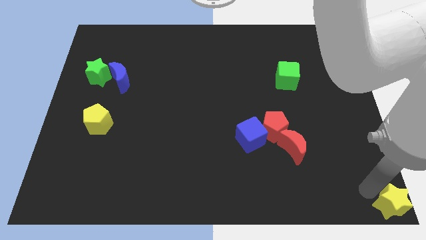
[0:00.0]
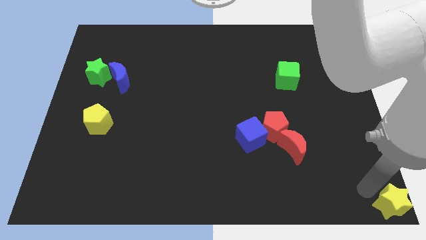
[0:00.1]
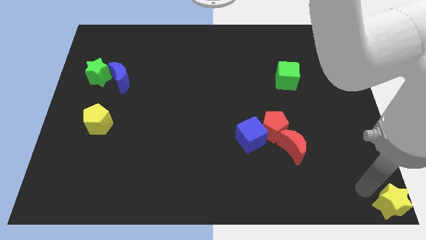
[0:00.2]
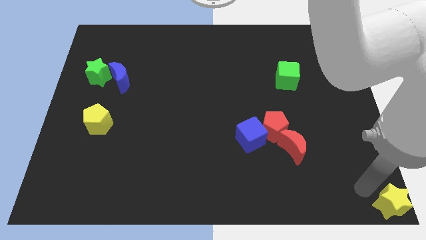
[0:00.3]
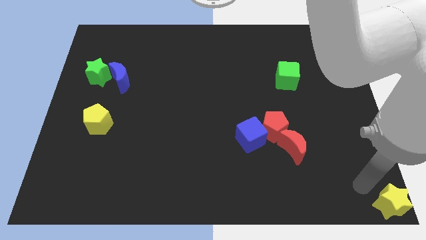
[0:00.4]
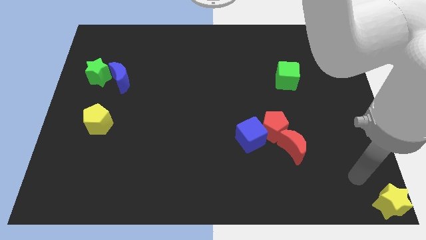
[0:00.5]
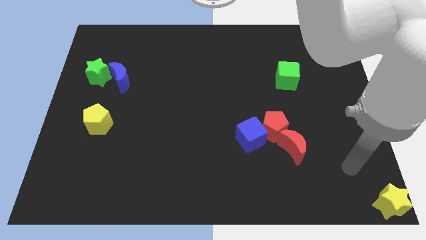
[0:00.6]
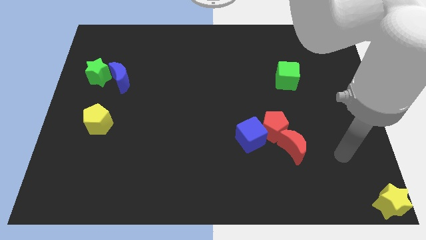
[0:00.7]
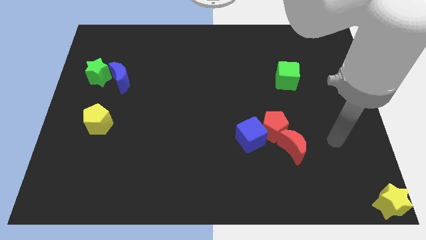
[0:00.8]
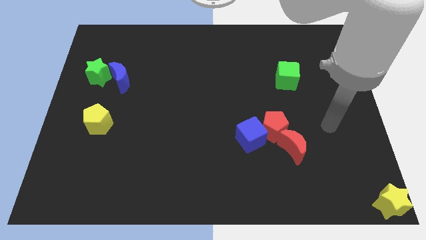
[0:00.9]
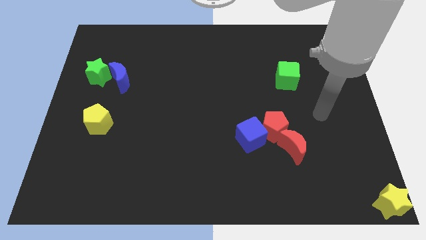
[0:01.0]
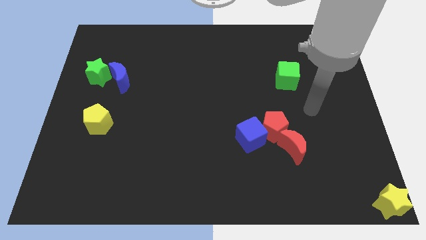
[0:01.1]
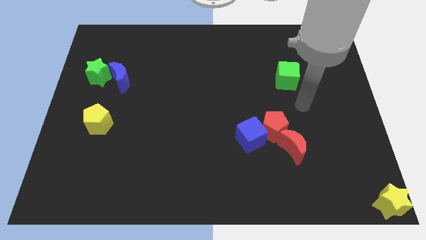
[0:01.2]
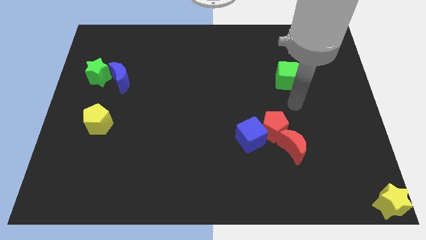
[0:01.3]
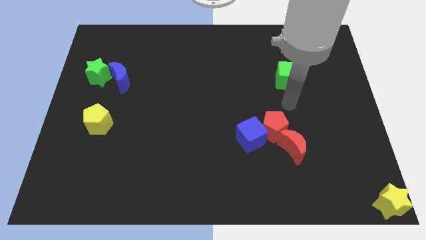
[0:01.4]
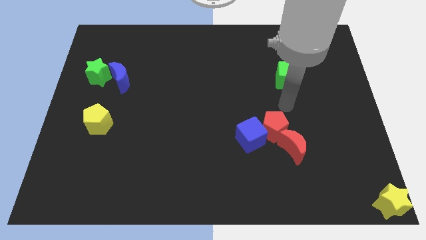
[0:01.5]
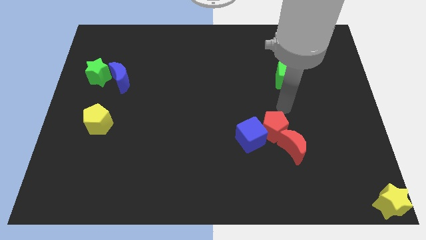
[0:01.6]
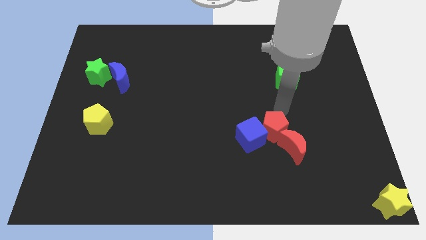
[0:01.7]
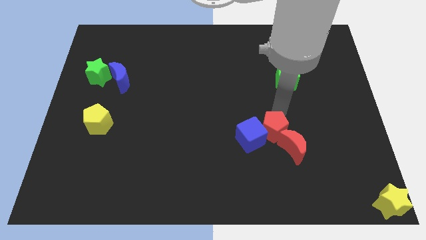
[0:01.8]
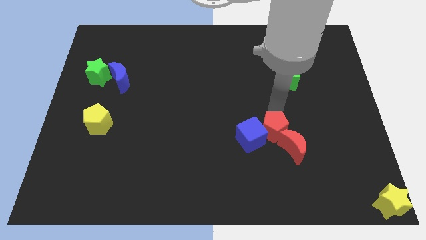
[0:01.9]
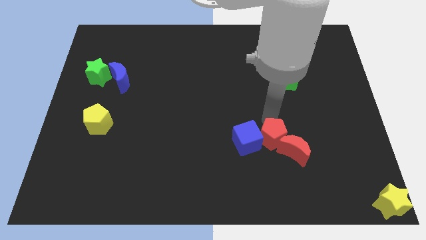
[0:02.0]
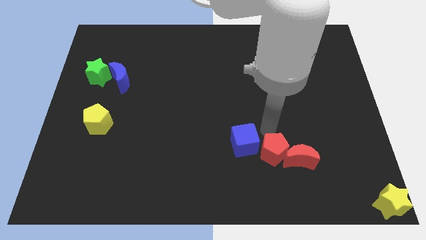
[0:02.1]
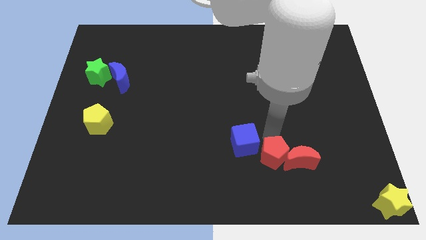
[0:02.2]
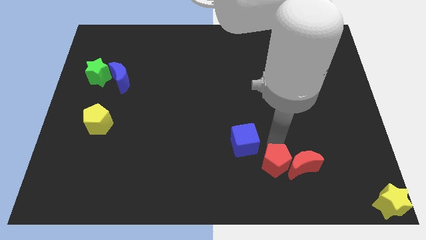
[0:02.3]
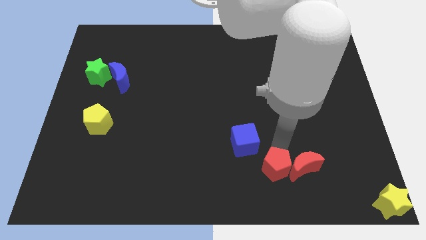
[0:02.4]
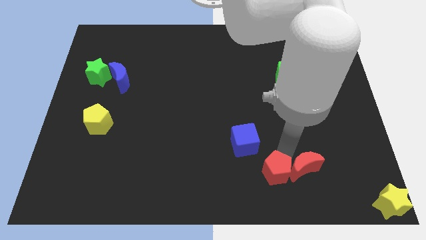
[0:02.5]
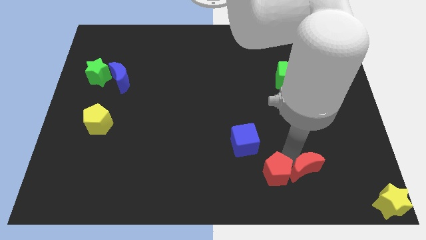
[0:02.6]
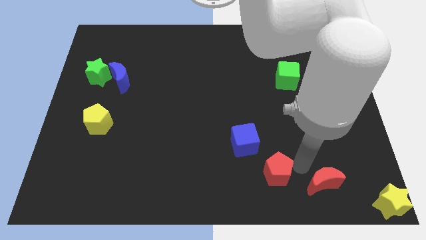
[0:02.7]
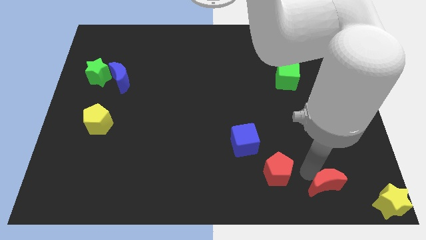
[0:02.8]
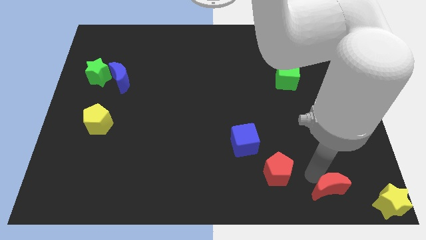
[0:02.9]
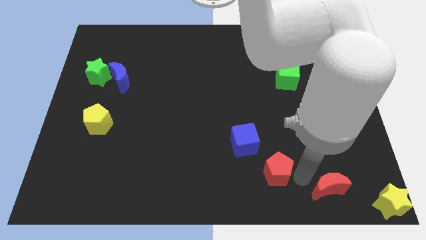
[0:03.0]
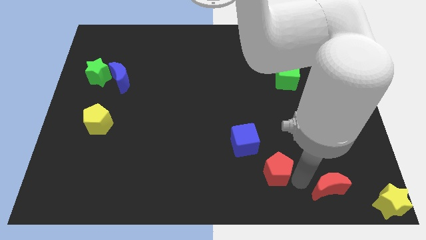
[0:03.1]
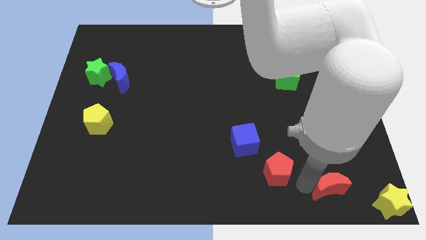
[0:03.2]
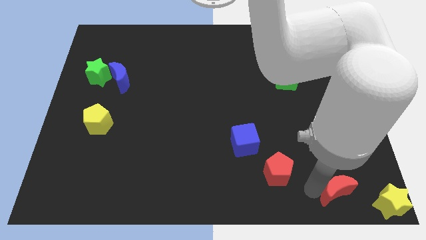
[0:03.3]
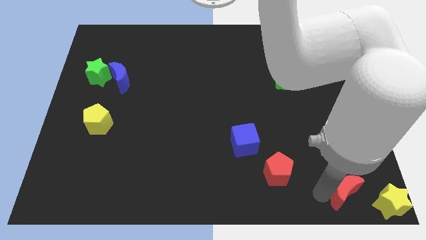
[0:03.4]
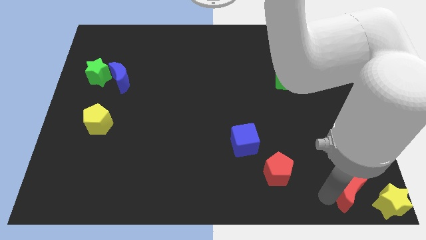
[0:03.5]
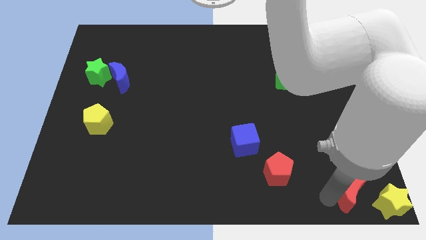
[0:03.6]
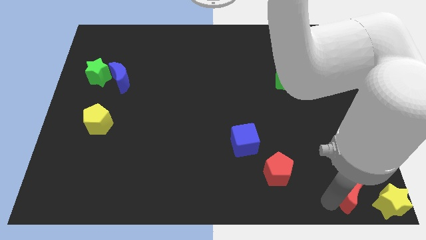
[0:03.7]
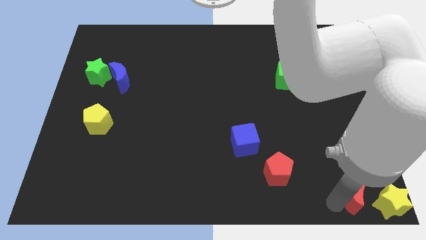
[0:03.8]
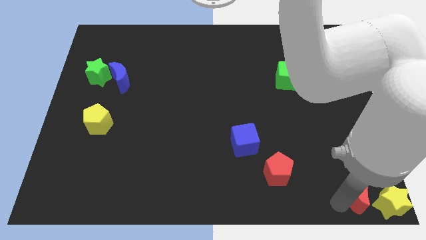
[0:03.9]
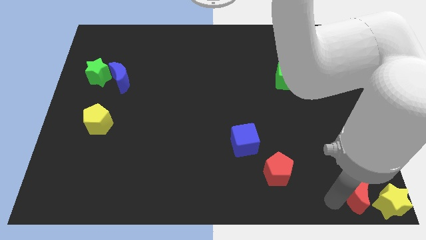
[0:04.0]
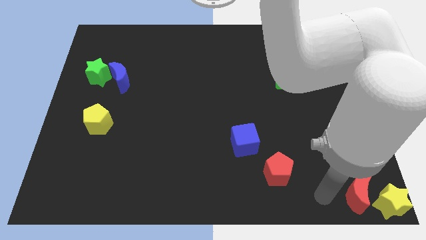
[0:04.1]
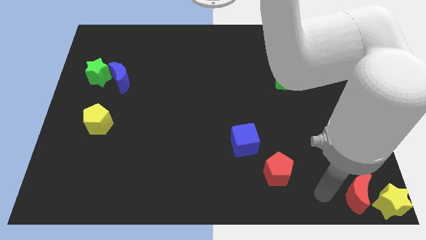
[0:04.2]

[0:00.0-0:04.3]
place the red moon left to the yellow star

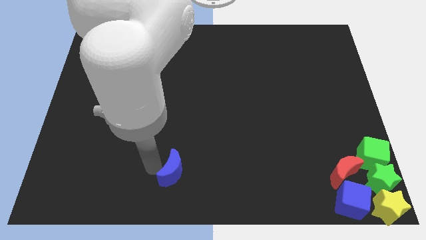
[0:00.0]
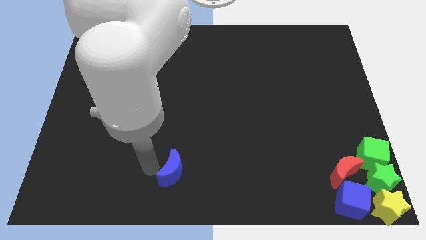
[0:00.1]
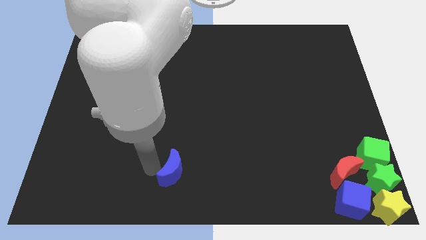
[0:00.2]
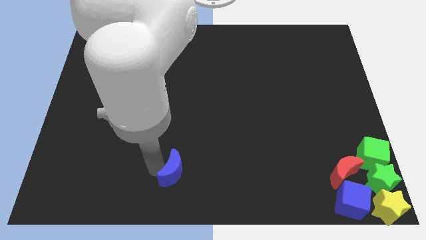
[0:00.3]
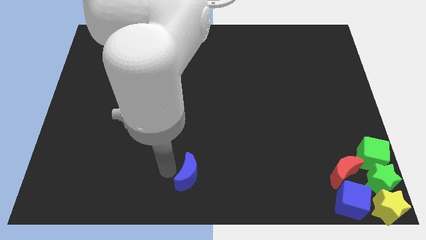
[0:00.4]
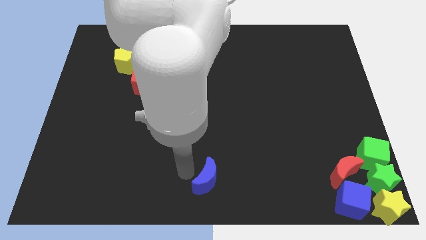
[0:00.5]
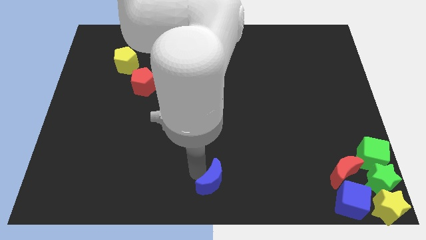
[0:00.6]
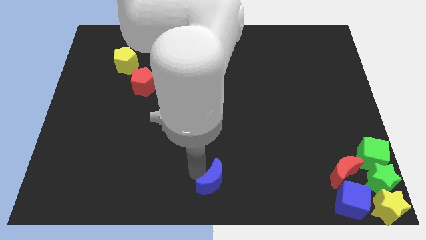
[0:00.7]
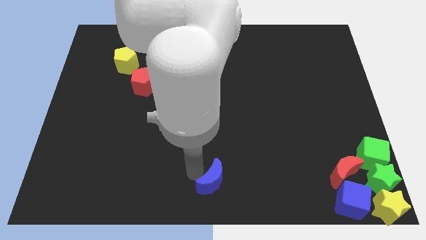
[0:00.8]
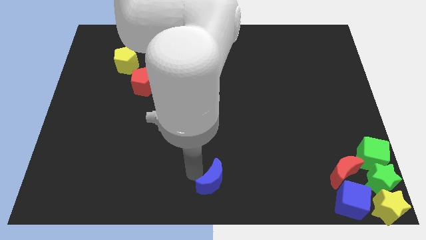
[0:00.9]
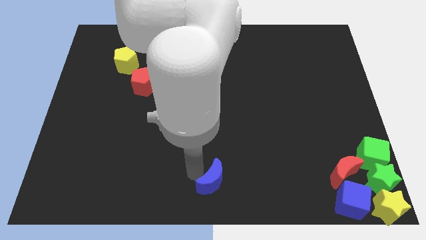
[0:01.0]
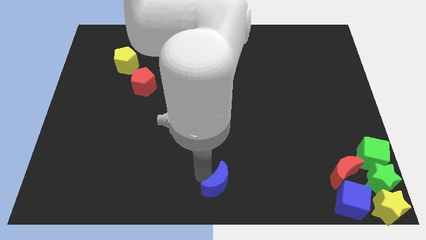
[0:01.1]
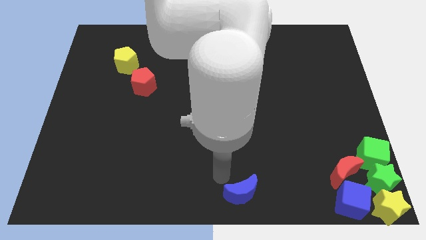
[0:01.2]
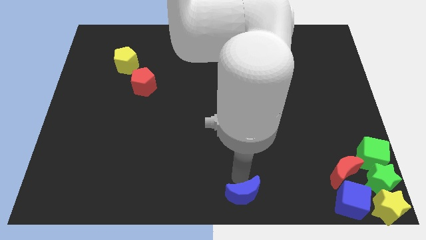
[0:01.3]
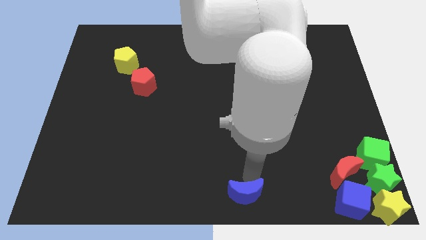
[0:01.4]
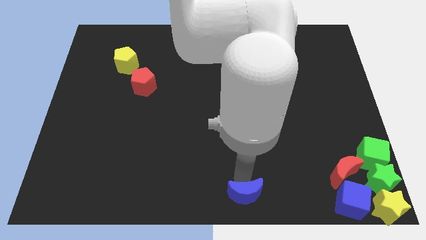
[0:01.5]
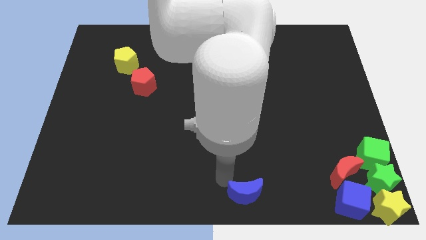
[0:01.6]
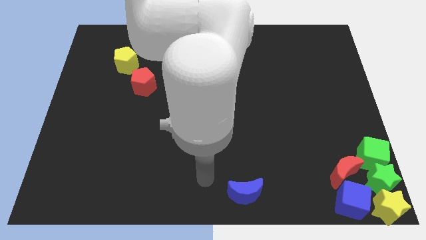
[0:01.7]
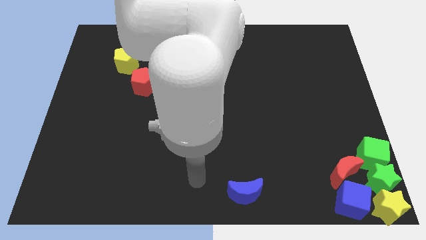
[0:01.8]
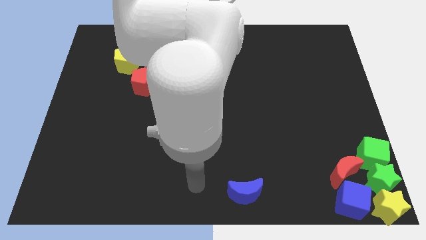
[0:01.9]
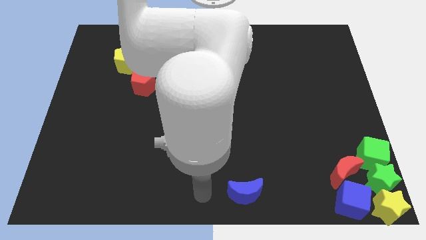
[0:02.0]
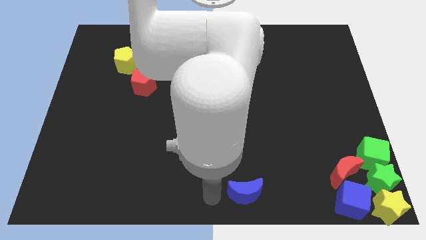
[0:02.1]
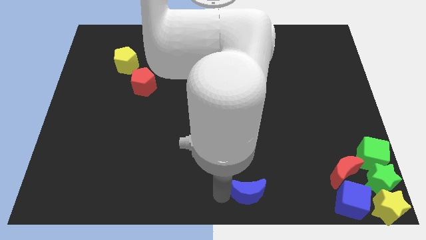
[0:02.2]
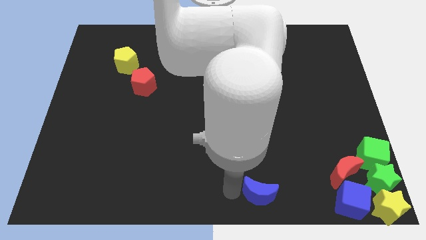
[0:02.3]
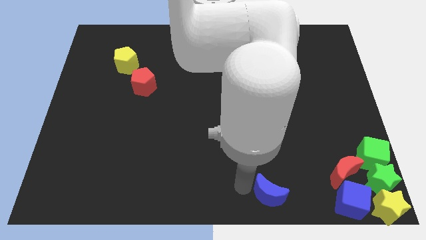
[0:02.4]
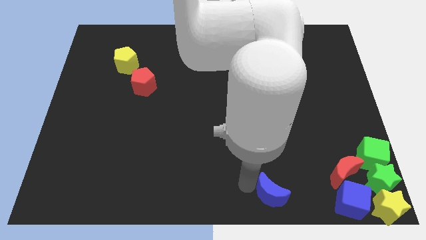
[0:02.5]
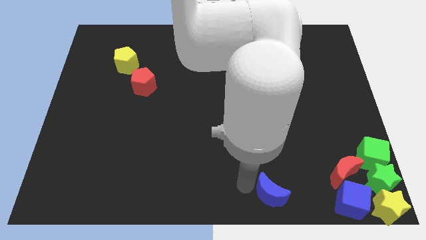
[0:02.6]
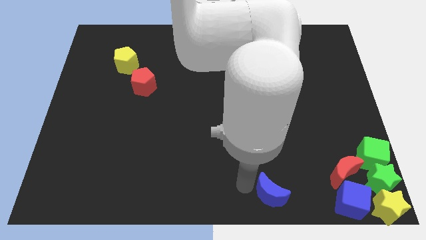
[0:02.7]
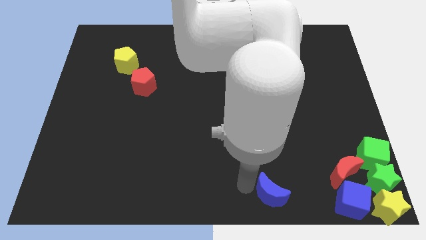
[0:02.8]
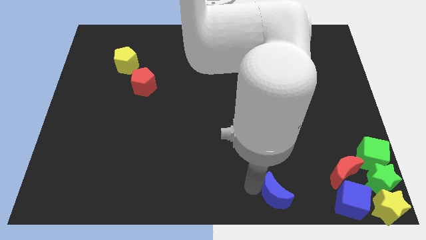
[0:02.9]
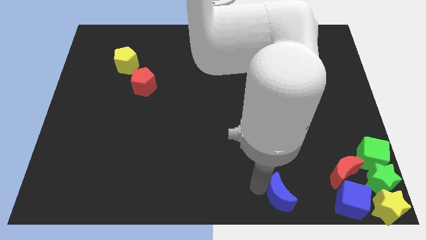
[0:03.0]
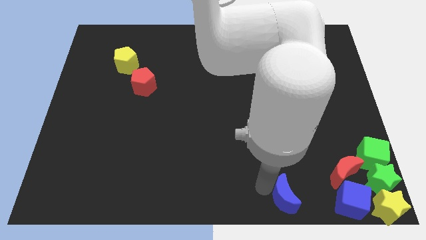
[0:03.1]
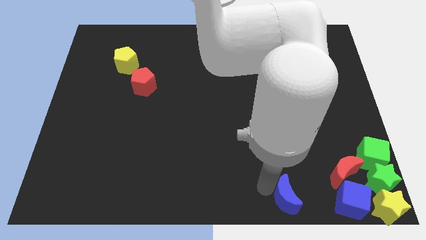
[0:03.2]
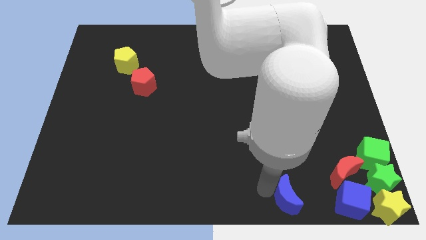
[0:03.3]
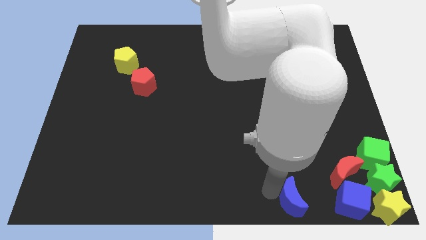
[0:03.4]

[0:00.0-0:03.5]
place the blue moon towards the right

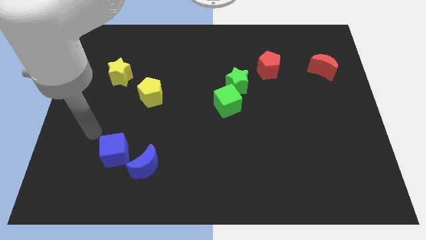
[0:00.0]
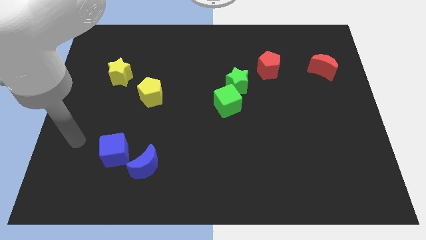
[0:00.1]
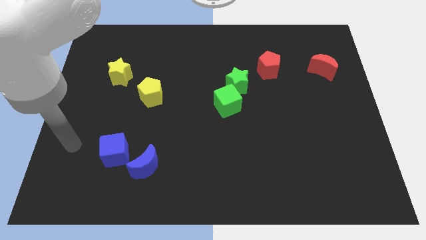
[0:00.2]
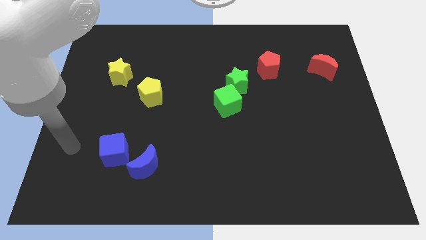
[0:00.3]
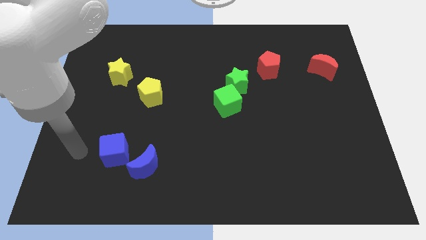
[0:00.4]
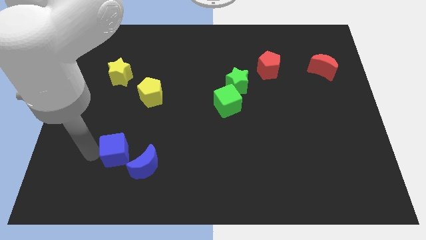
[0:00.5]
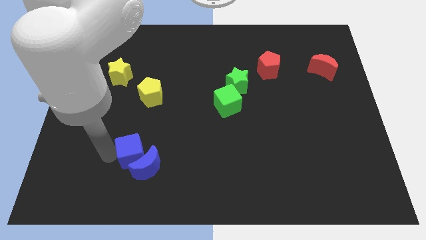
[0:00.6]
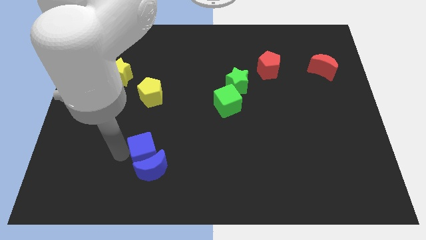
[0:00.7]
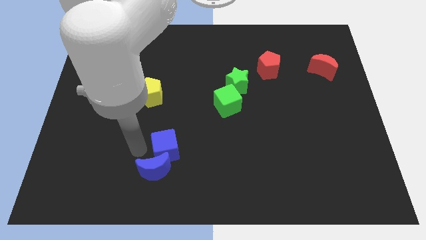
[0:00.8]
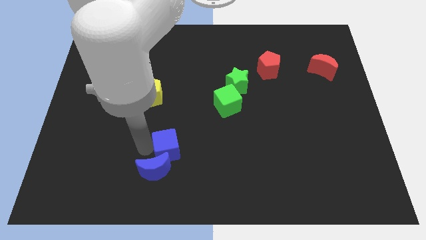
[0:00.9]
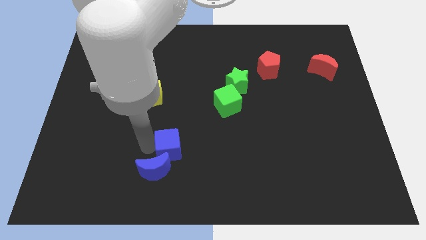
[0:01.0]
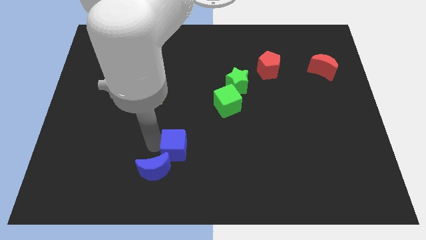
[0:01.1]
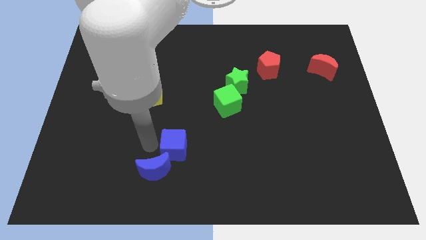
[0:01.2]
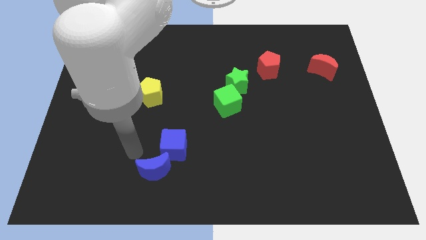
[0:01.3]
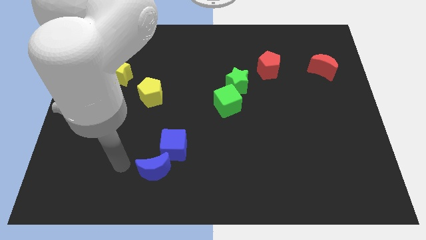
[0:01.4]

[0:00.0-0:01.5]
push the blue cube towards the diagonal top right side of the blue crescent
